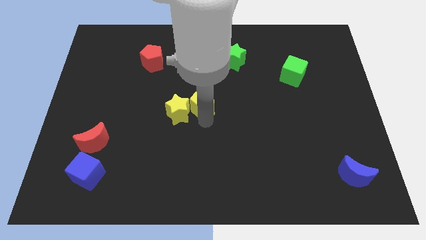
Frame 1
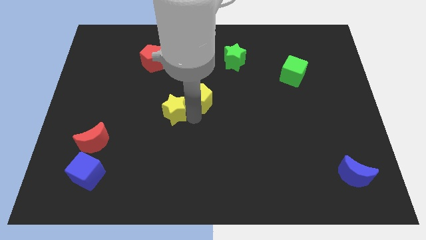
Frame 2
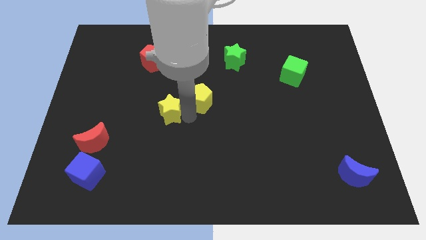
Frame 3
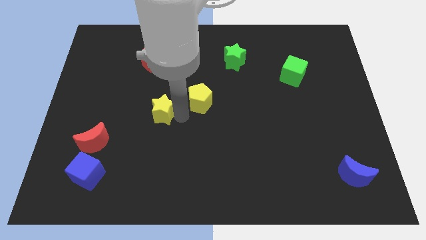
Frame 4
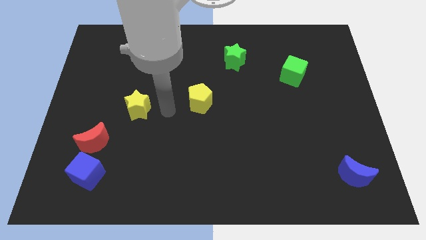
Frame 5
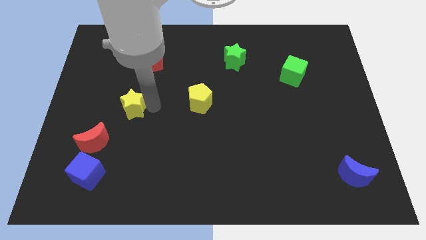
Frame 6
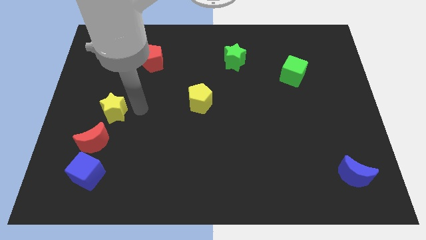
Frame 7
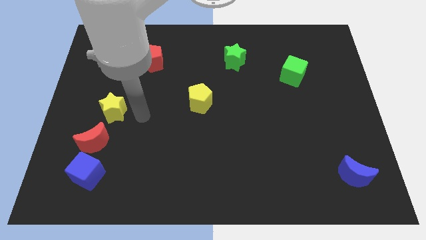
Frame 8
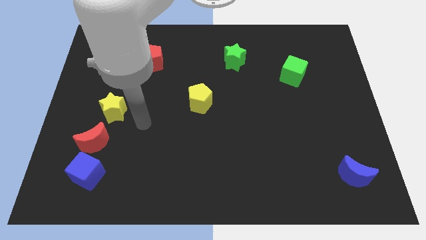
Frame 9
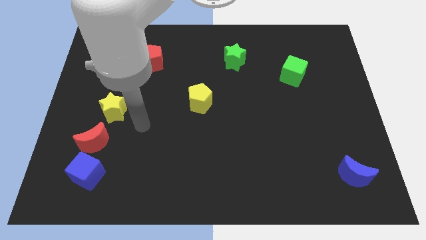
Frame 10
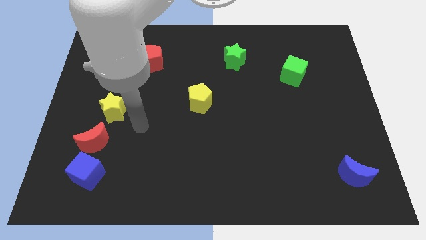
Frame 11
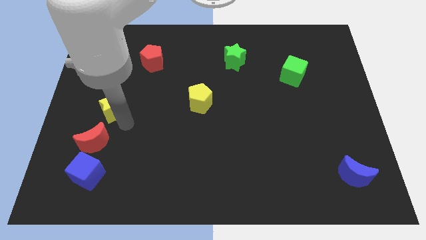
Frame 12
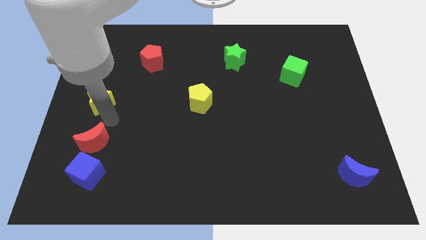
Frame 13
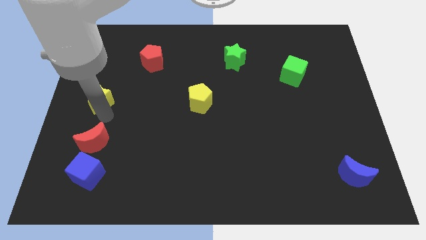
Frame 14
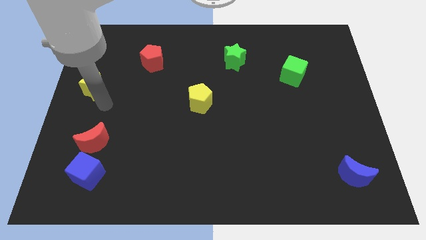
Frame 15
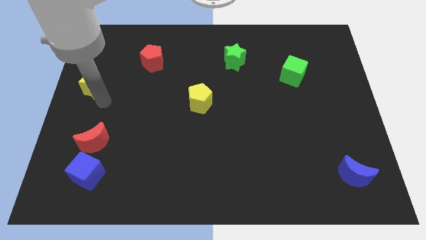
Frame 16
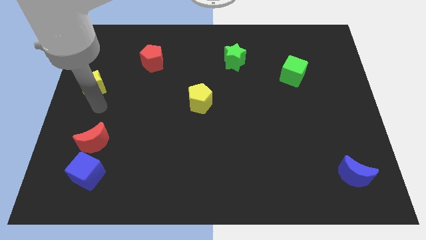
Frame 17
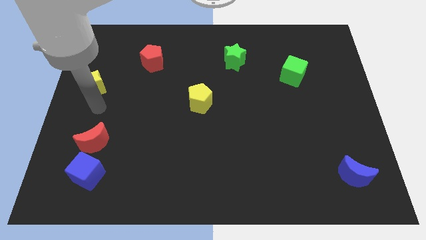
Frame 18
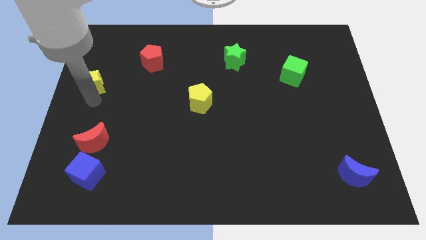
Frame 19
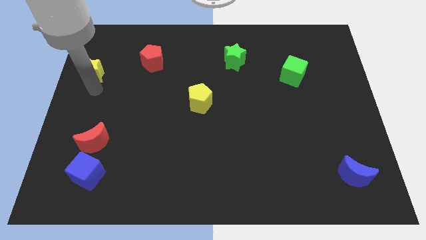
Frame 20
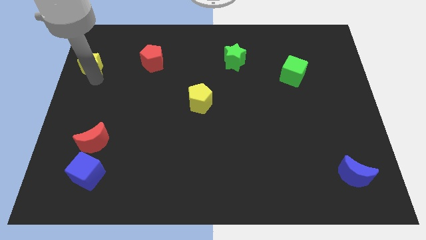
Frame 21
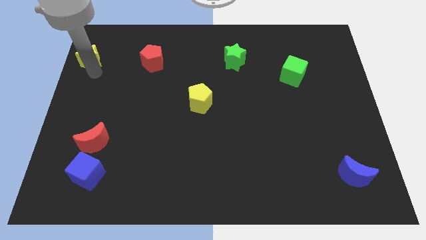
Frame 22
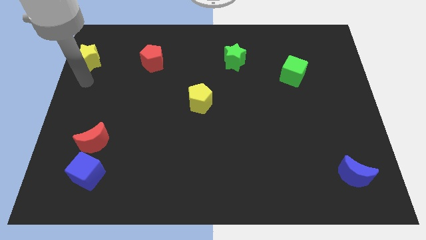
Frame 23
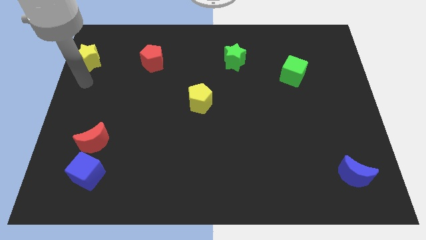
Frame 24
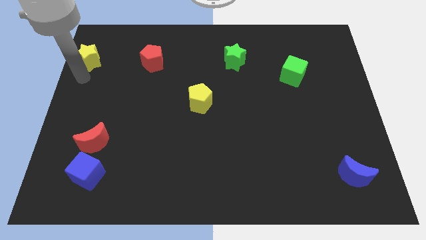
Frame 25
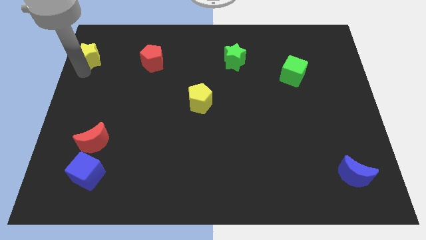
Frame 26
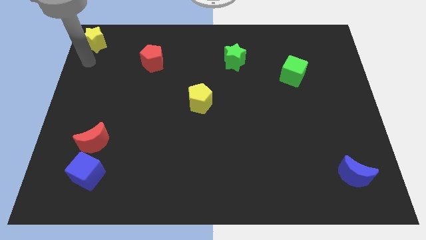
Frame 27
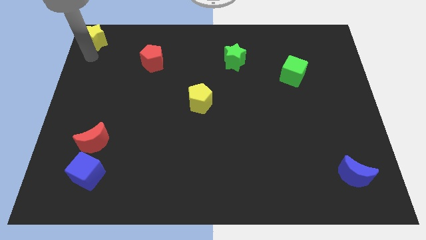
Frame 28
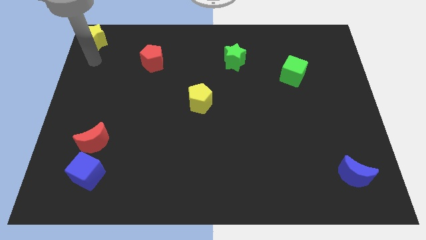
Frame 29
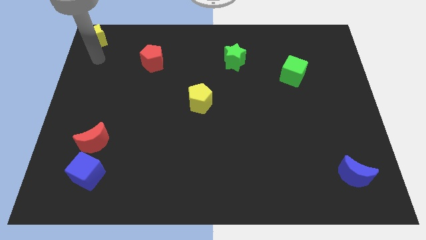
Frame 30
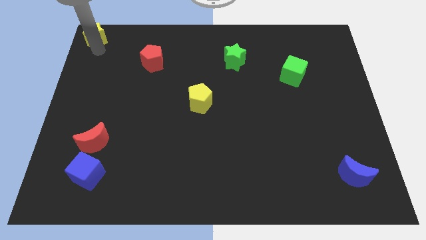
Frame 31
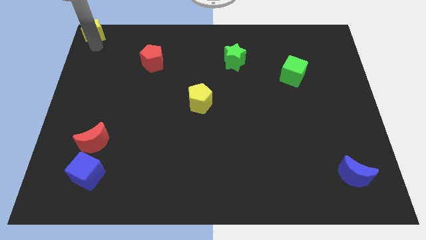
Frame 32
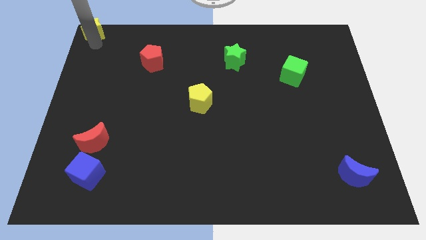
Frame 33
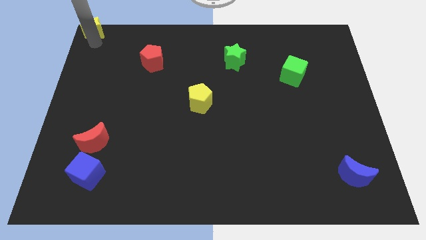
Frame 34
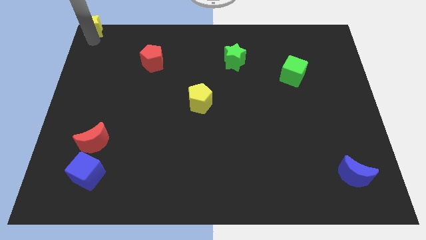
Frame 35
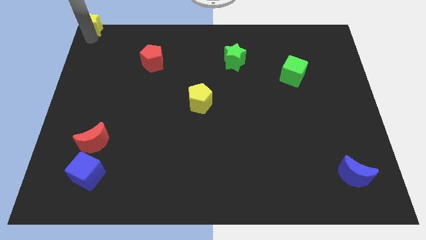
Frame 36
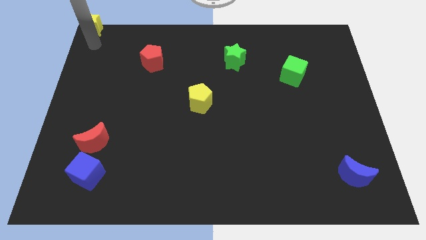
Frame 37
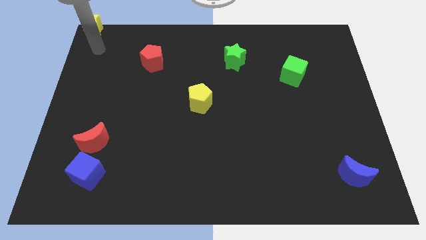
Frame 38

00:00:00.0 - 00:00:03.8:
move the yellow star to the top left corner of the board

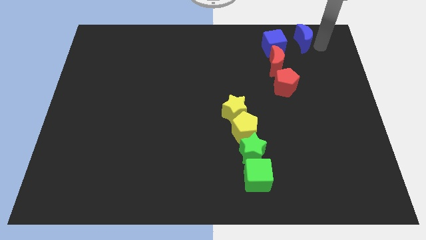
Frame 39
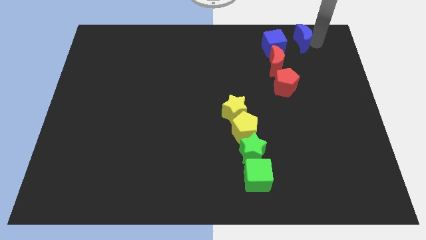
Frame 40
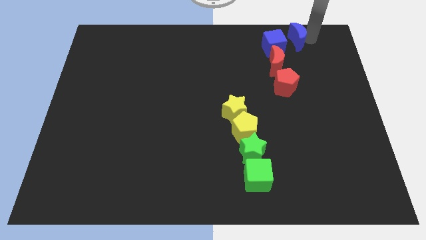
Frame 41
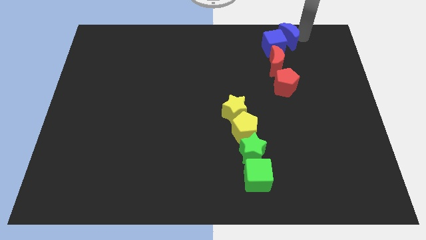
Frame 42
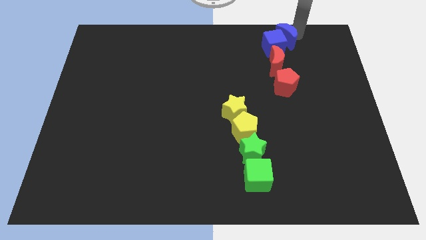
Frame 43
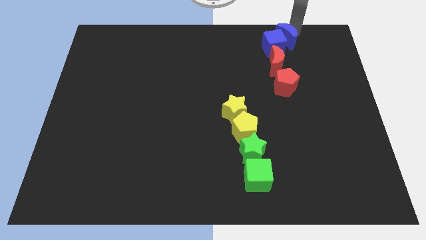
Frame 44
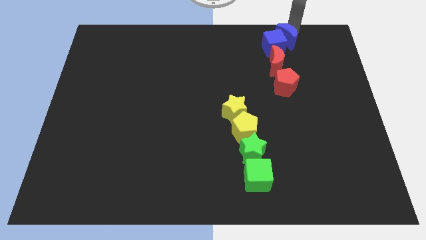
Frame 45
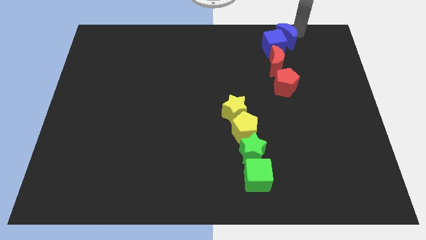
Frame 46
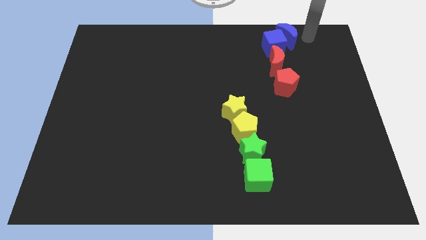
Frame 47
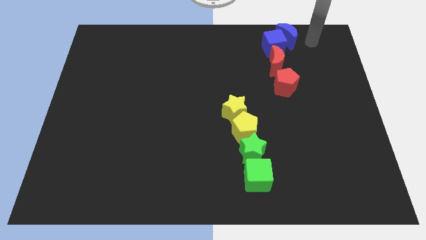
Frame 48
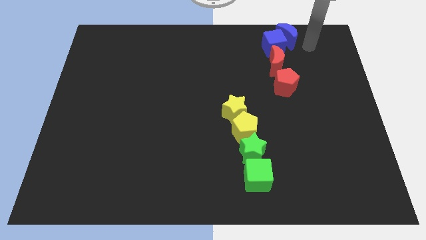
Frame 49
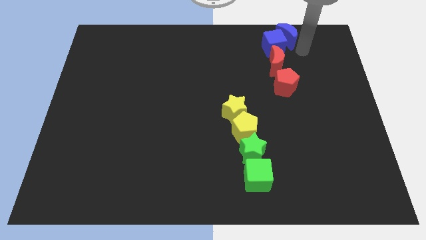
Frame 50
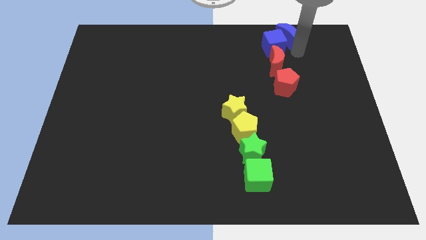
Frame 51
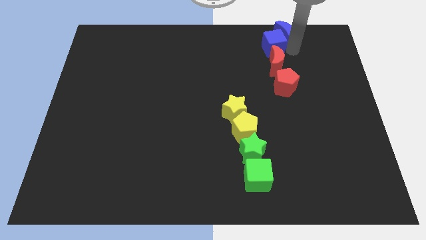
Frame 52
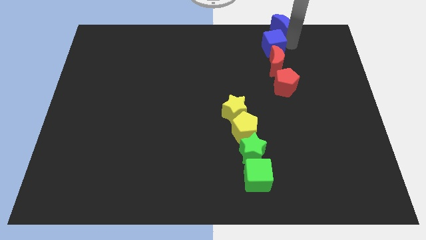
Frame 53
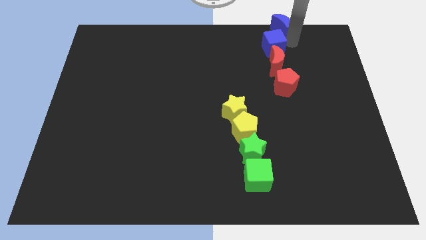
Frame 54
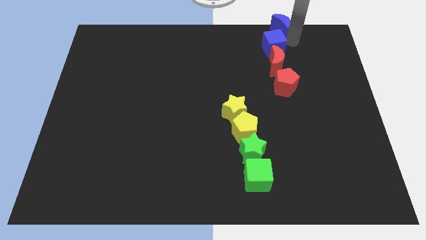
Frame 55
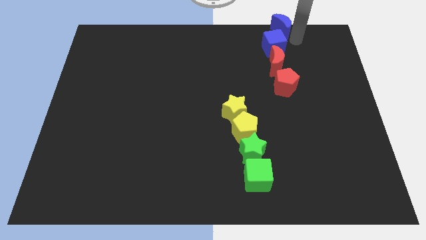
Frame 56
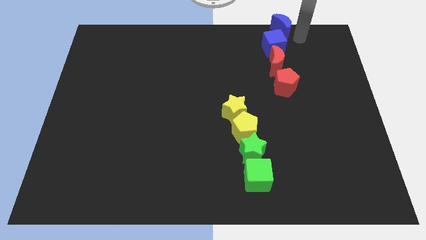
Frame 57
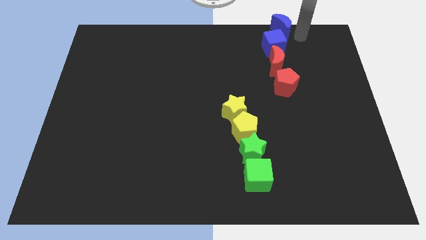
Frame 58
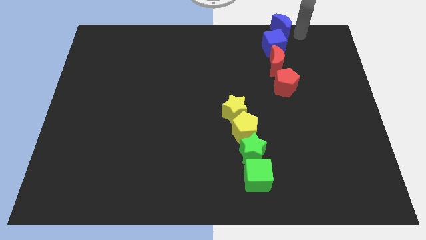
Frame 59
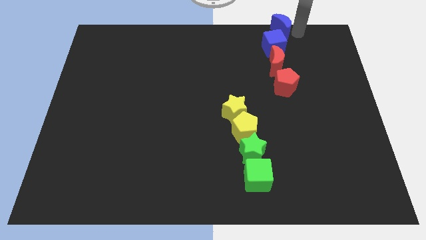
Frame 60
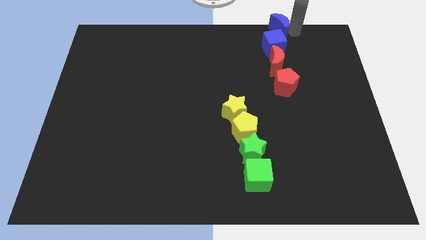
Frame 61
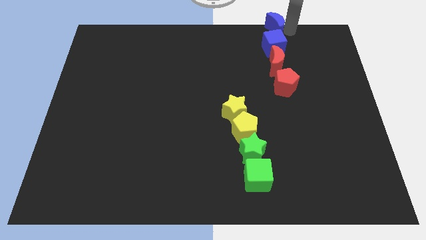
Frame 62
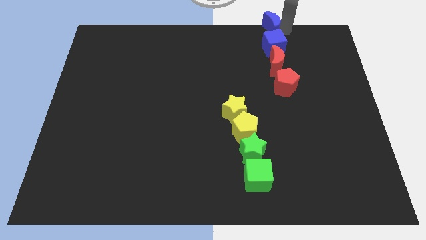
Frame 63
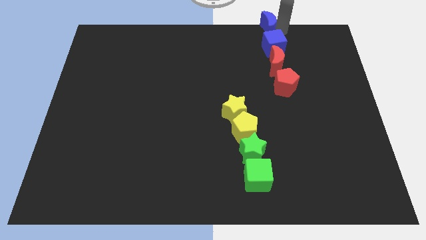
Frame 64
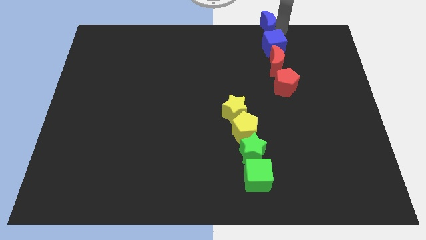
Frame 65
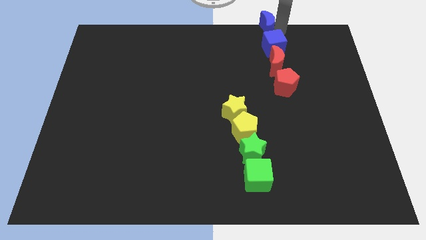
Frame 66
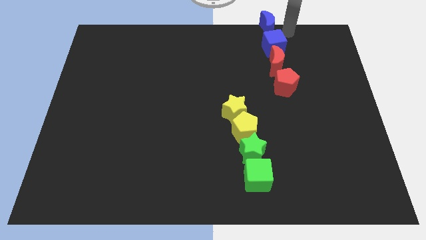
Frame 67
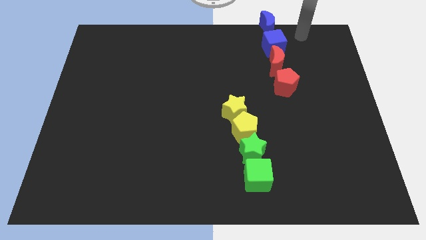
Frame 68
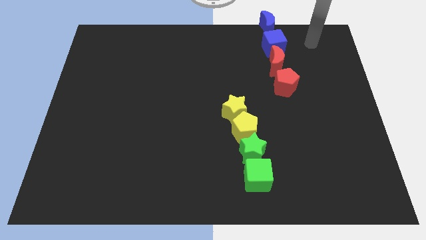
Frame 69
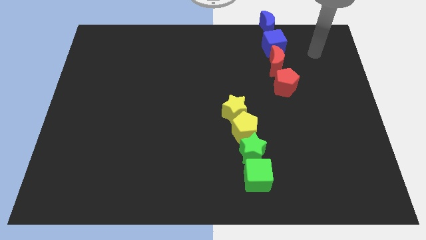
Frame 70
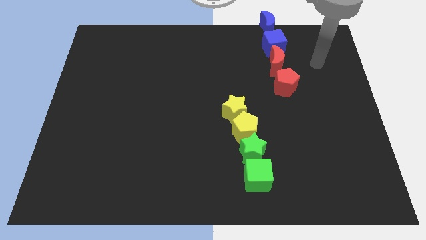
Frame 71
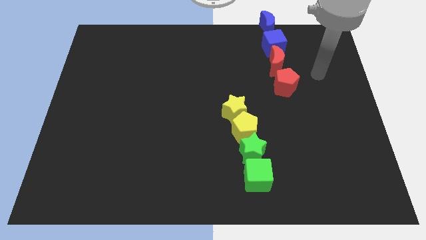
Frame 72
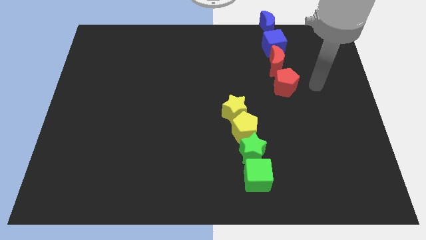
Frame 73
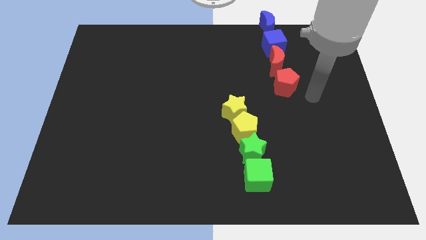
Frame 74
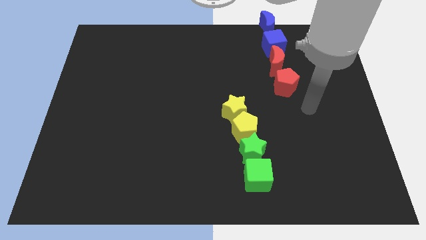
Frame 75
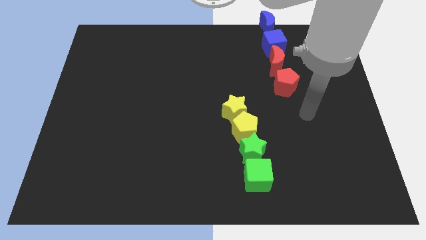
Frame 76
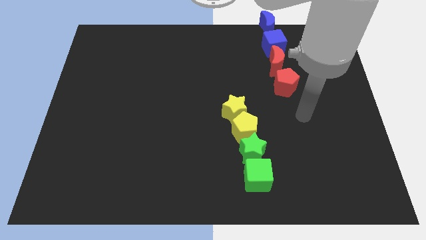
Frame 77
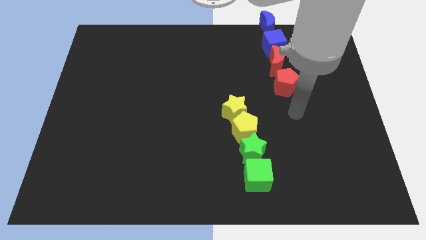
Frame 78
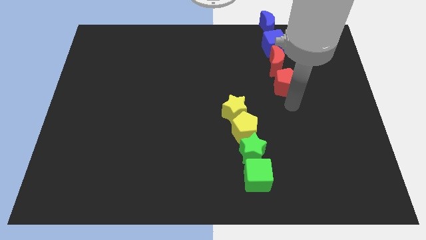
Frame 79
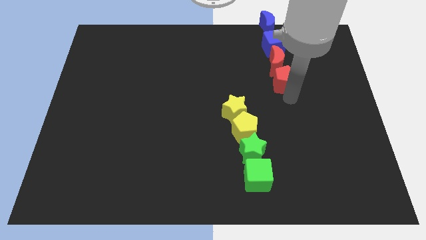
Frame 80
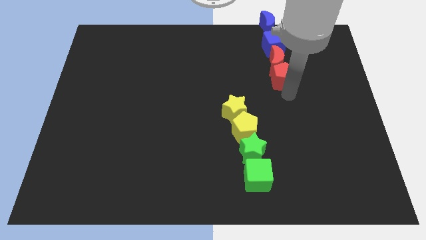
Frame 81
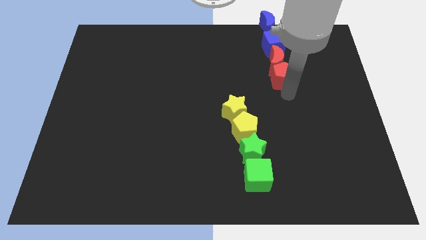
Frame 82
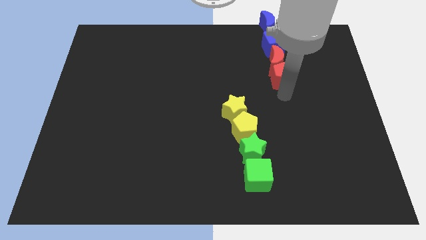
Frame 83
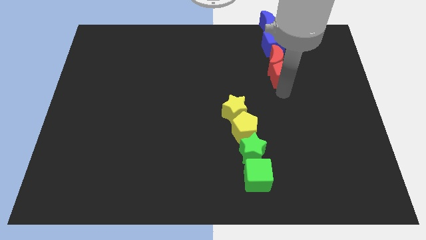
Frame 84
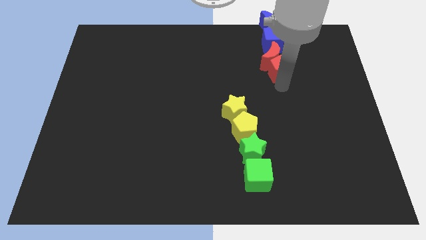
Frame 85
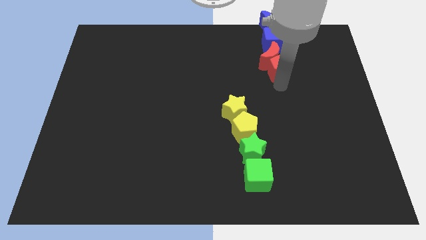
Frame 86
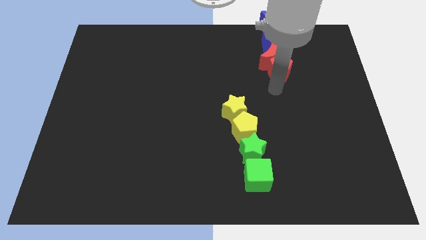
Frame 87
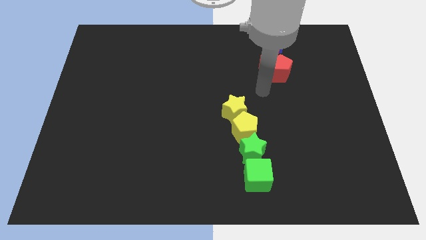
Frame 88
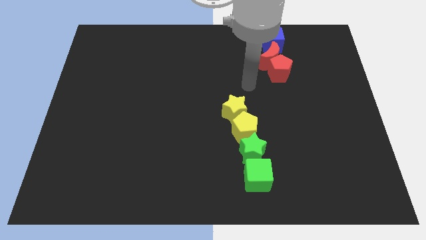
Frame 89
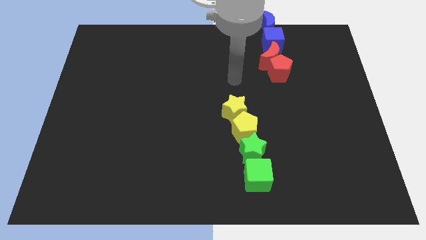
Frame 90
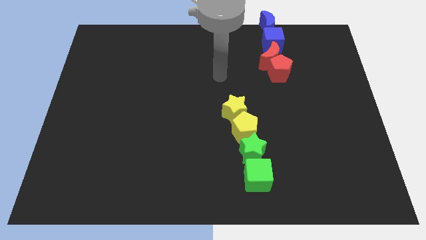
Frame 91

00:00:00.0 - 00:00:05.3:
arrange the red blocks and blue blocks in a vertcal line
